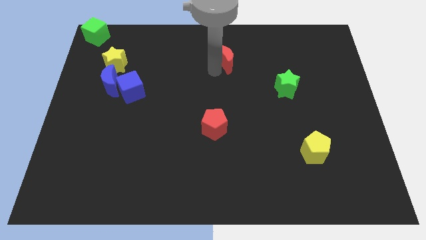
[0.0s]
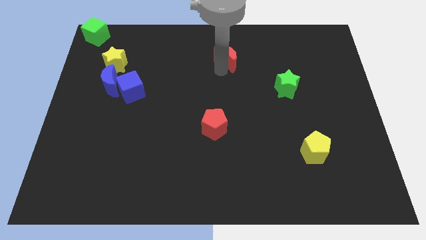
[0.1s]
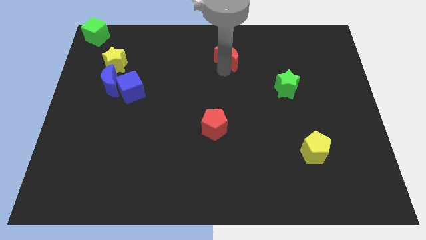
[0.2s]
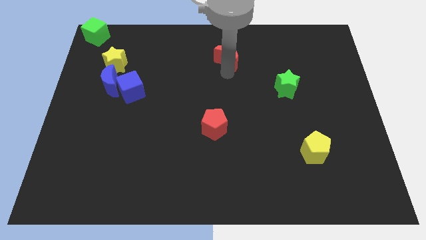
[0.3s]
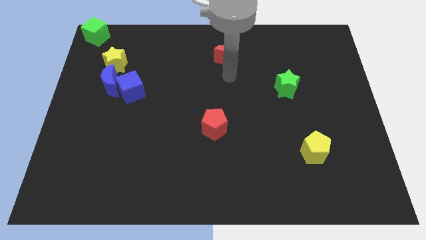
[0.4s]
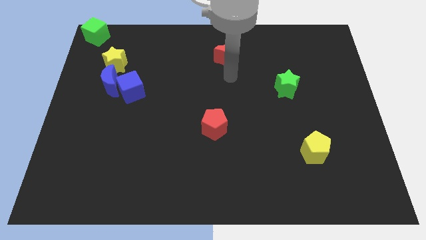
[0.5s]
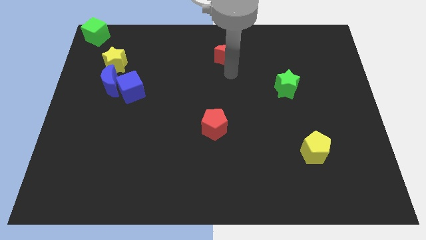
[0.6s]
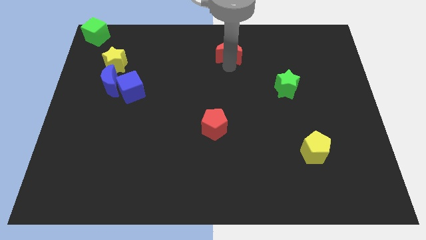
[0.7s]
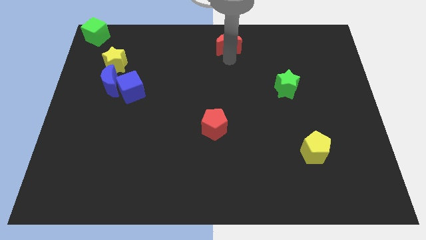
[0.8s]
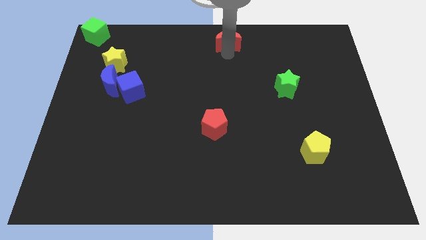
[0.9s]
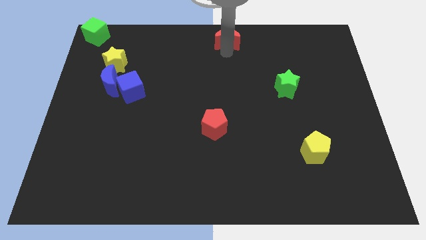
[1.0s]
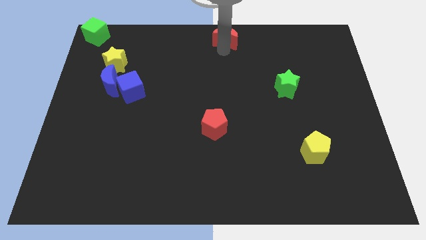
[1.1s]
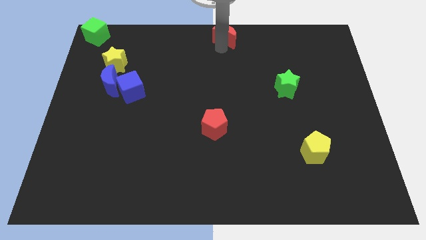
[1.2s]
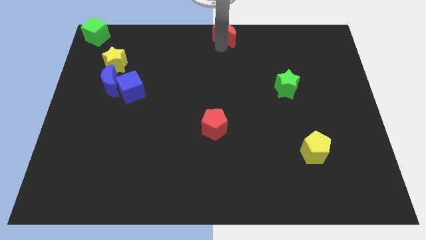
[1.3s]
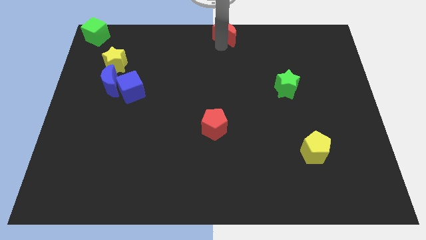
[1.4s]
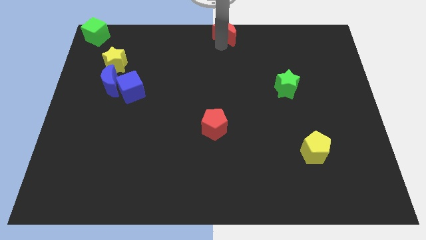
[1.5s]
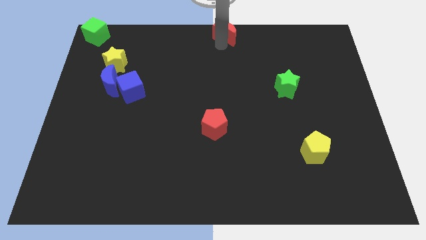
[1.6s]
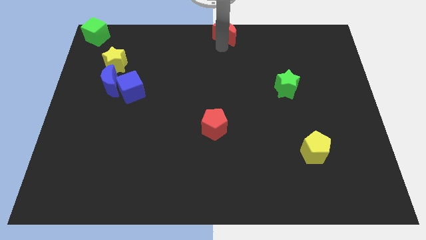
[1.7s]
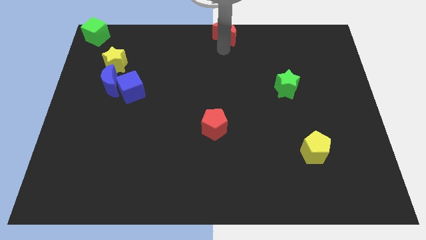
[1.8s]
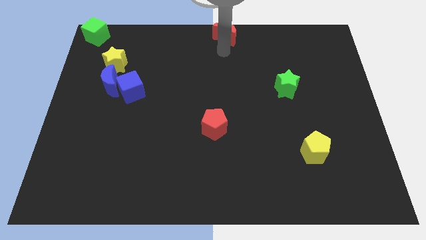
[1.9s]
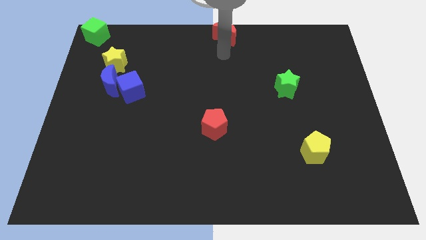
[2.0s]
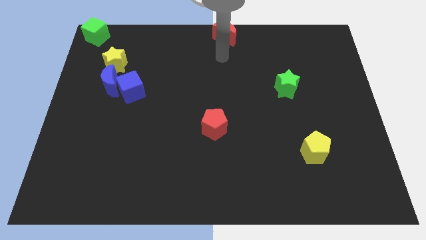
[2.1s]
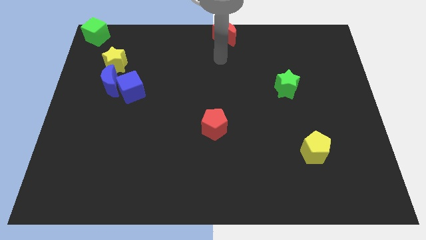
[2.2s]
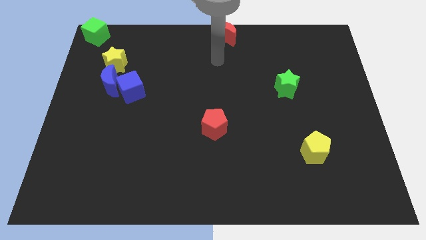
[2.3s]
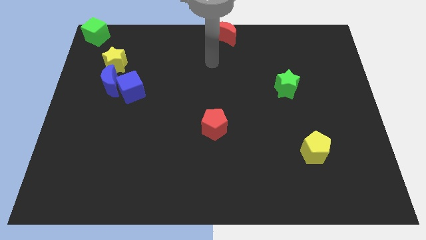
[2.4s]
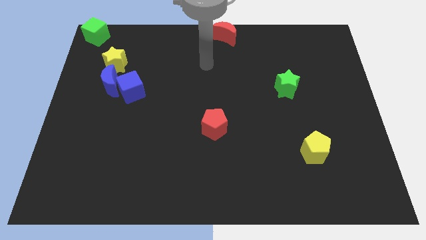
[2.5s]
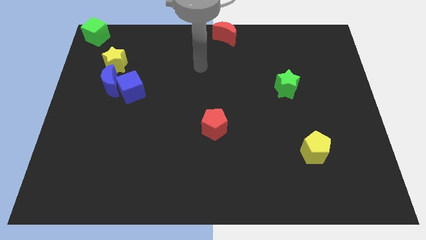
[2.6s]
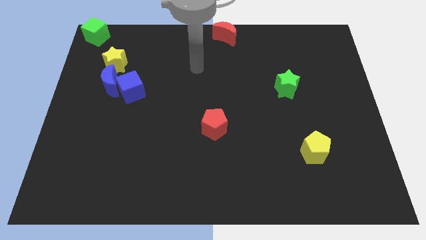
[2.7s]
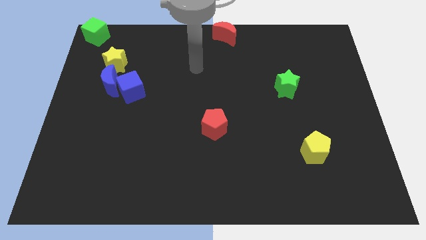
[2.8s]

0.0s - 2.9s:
push the red crescent to the top center of the board

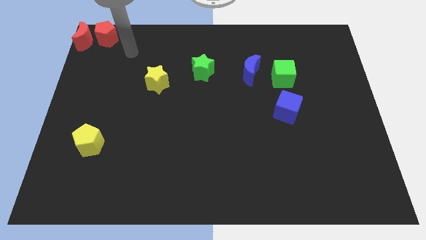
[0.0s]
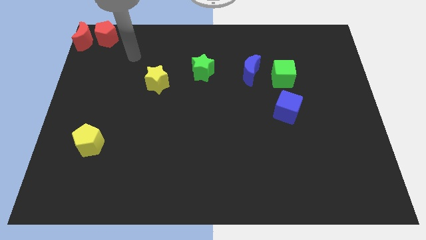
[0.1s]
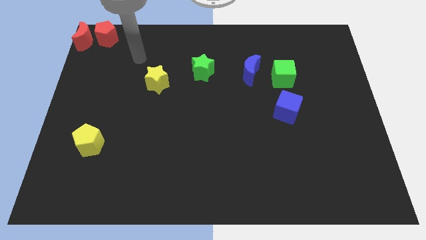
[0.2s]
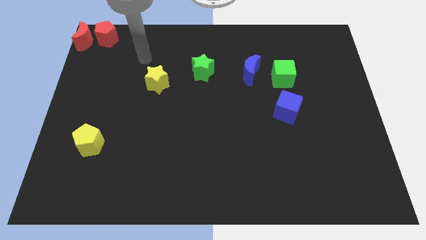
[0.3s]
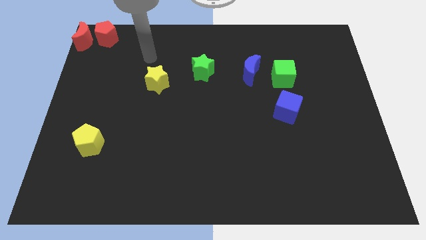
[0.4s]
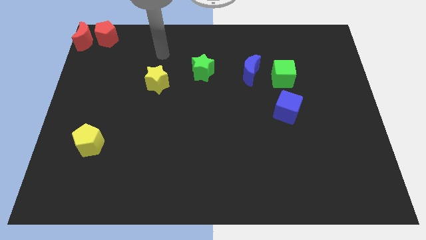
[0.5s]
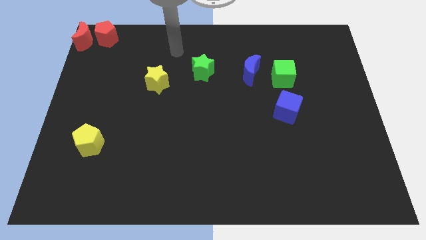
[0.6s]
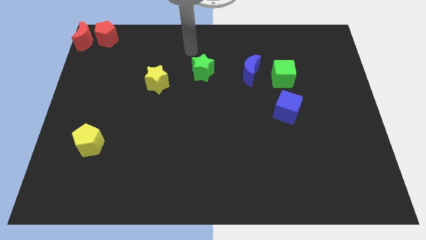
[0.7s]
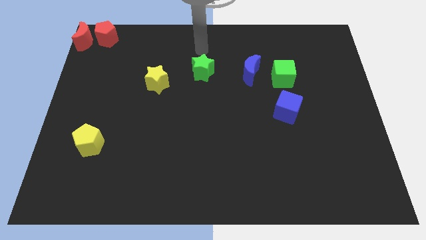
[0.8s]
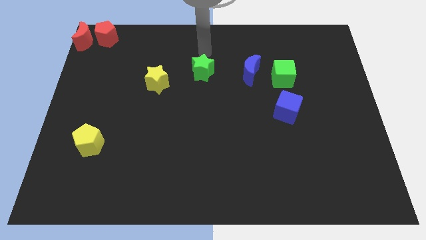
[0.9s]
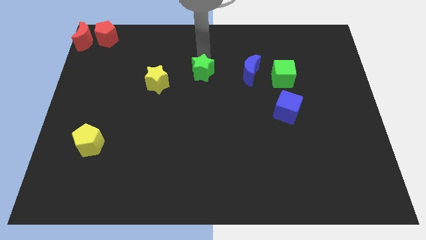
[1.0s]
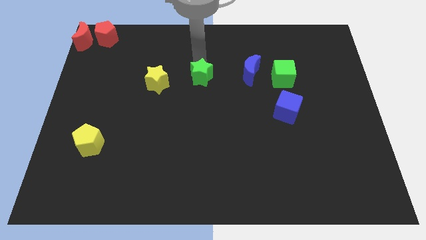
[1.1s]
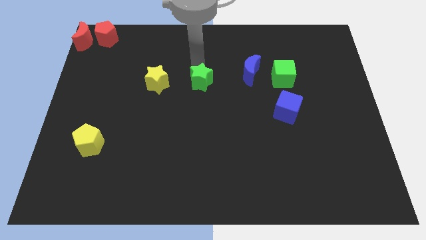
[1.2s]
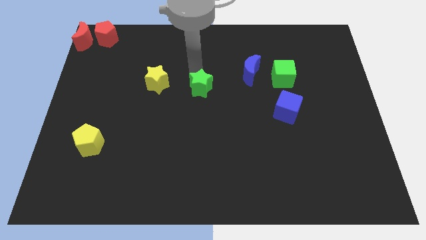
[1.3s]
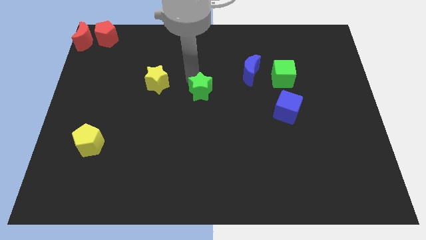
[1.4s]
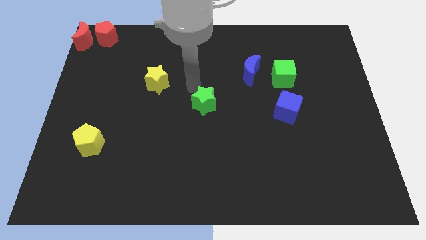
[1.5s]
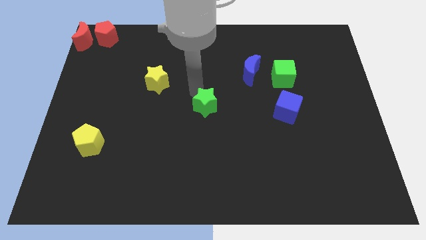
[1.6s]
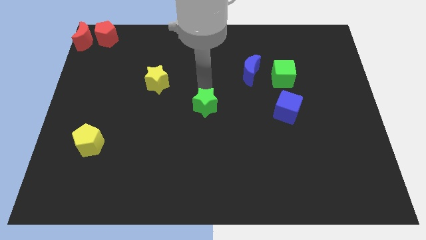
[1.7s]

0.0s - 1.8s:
place the green star at the center of the board

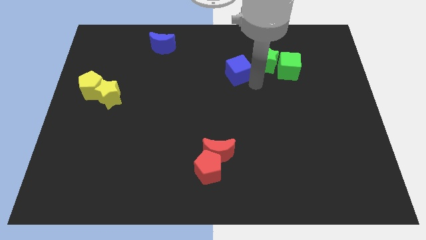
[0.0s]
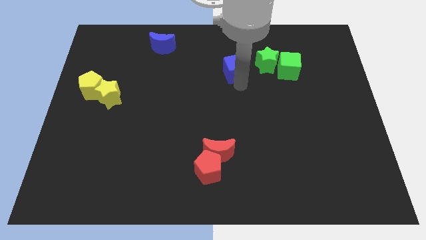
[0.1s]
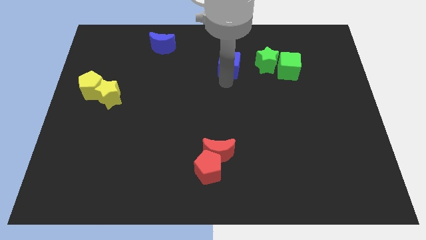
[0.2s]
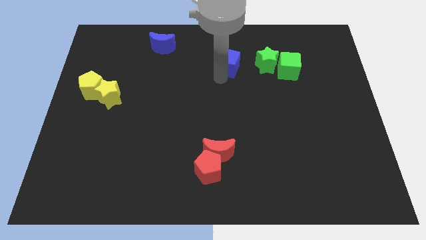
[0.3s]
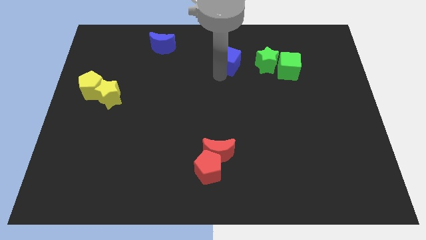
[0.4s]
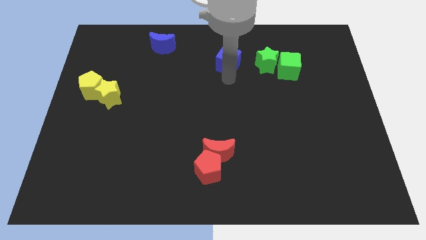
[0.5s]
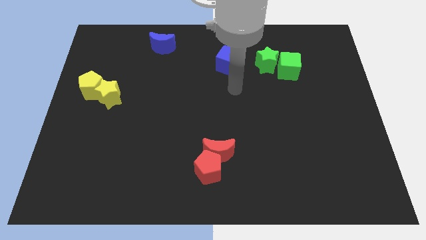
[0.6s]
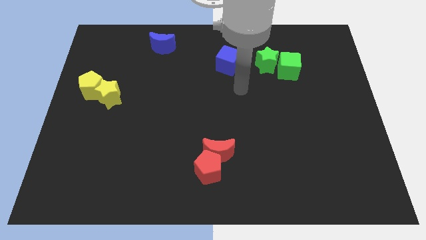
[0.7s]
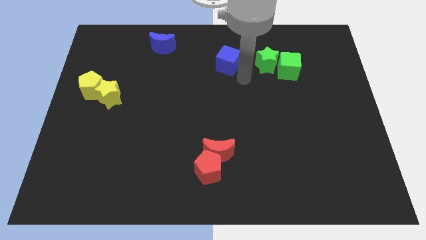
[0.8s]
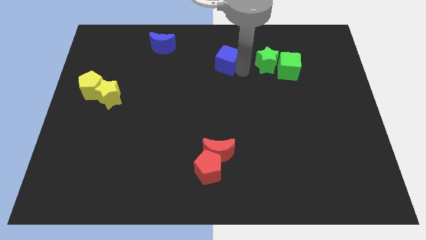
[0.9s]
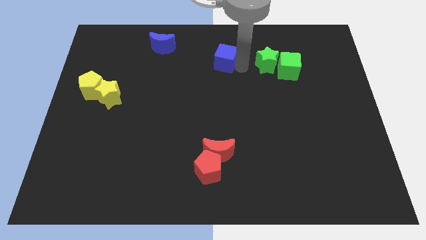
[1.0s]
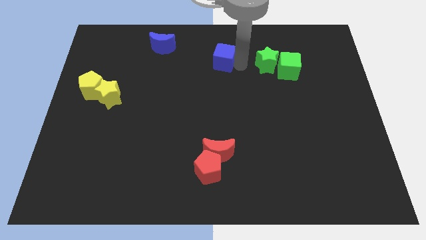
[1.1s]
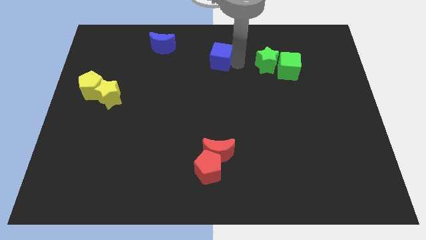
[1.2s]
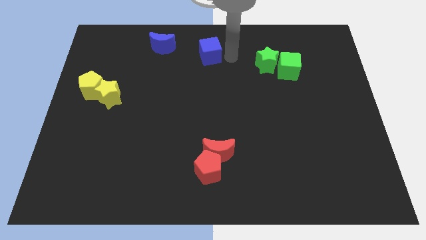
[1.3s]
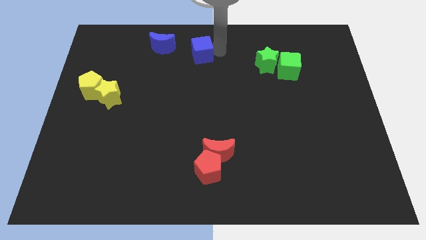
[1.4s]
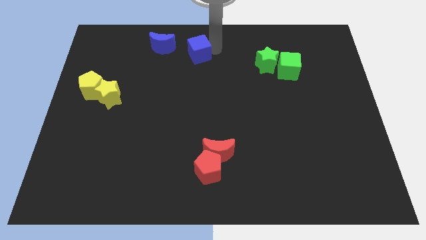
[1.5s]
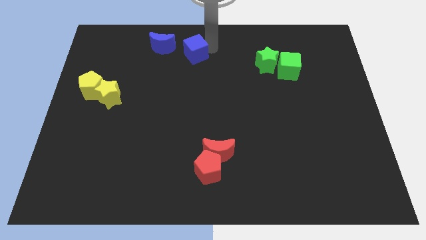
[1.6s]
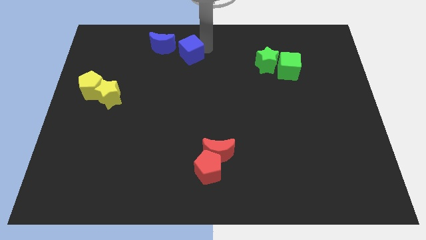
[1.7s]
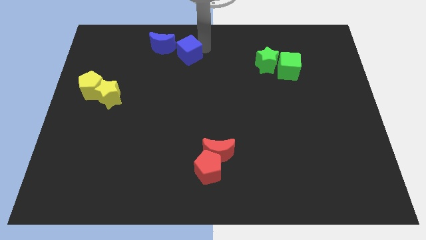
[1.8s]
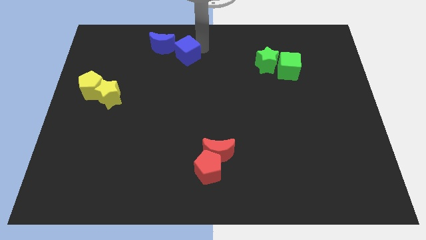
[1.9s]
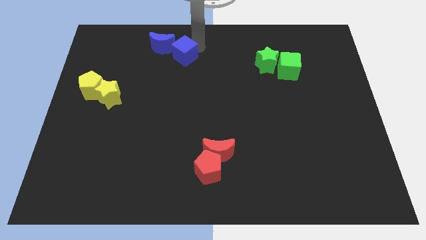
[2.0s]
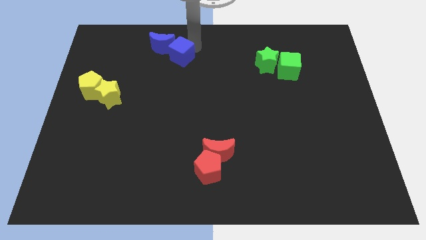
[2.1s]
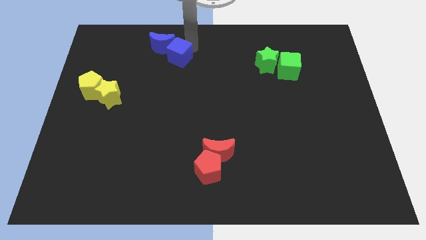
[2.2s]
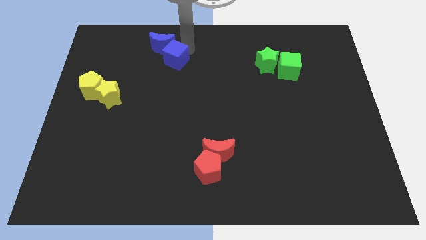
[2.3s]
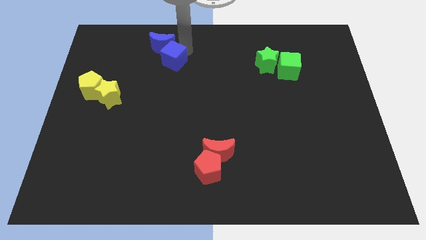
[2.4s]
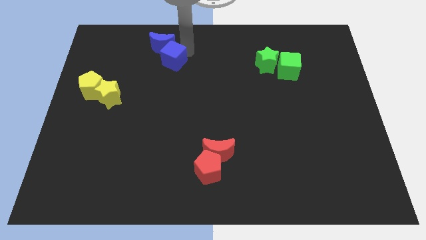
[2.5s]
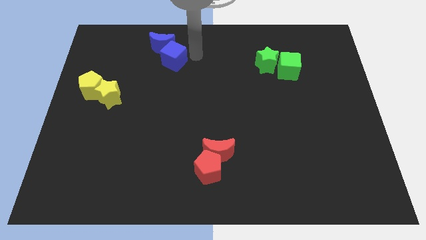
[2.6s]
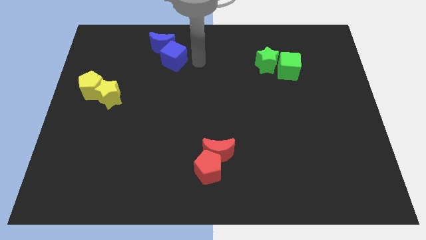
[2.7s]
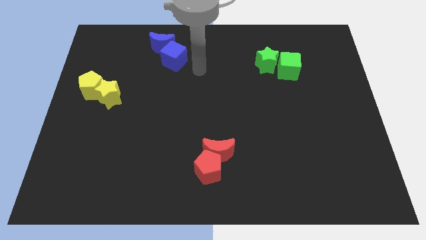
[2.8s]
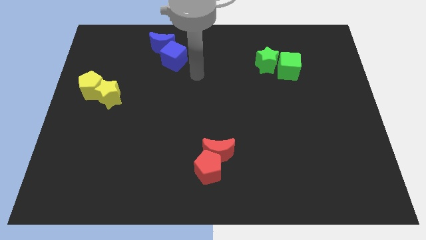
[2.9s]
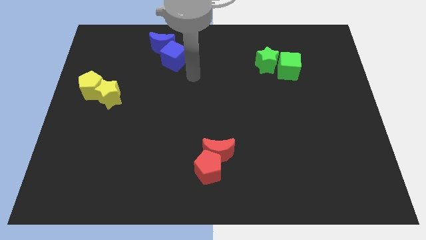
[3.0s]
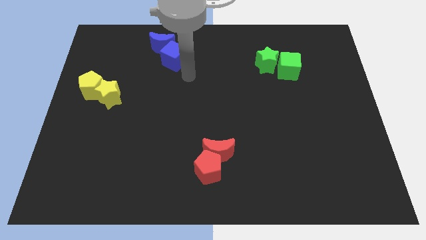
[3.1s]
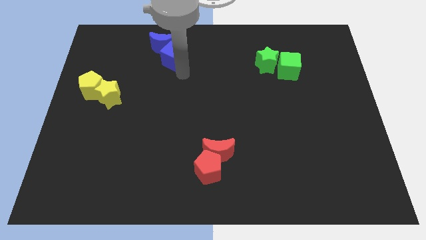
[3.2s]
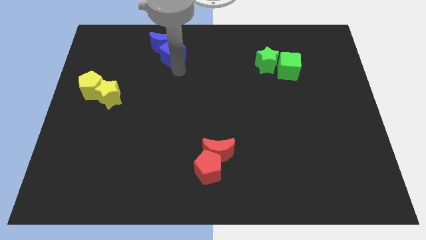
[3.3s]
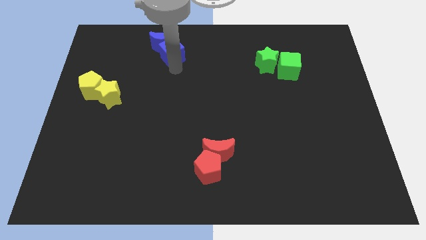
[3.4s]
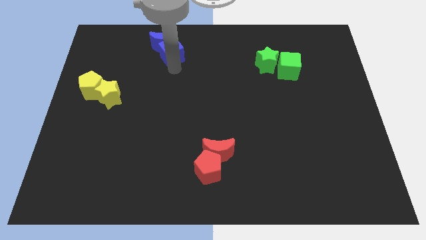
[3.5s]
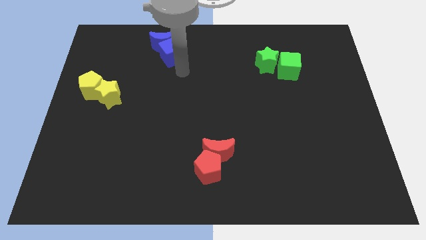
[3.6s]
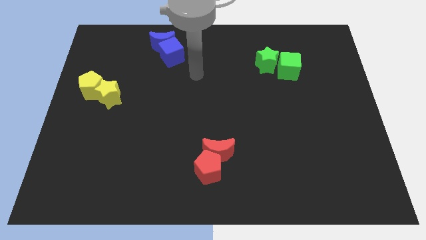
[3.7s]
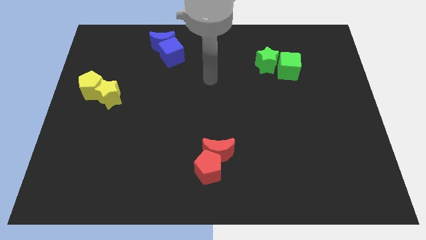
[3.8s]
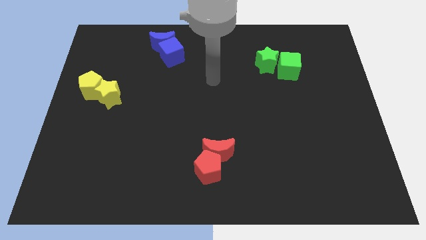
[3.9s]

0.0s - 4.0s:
push the blue cube into the blue crescent
